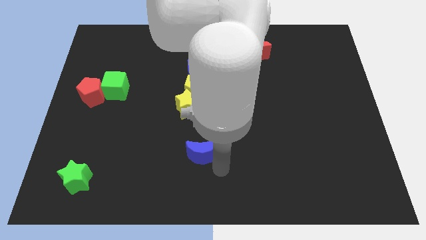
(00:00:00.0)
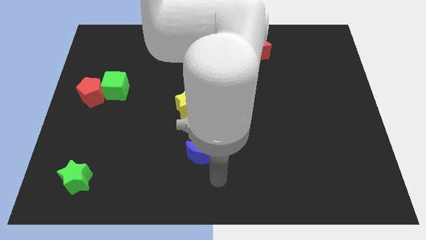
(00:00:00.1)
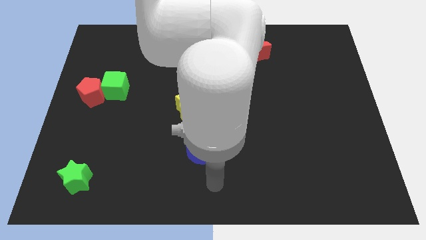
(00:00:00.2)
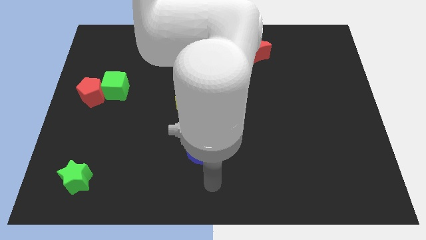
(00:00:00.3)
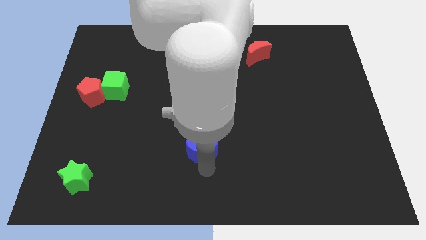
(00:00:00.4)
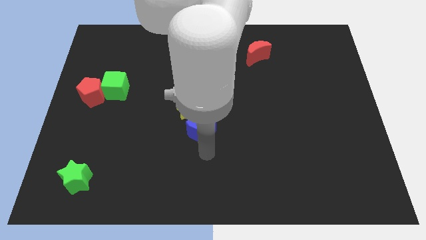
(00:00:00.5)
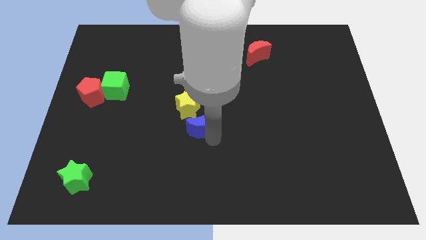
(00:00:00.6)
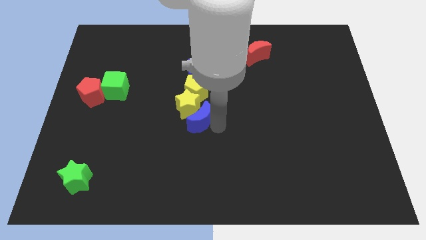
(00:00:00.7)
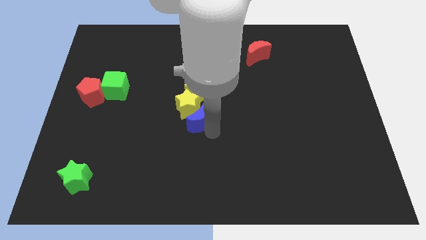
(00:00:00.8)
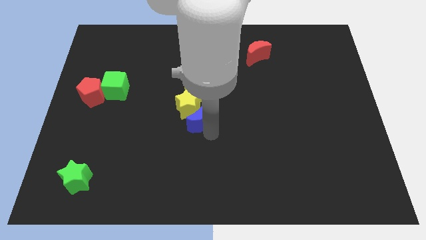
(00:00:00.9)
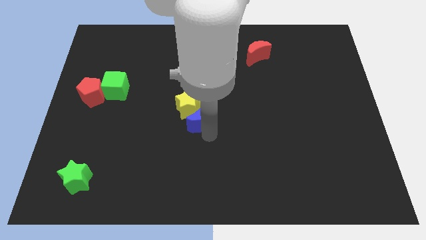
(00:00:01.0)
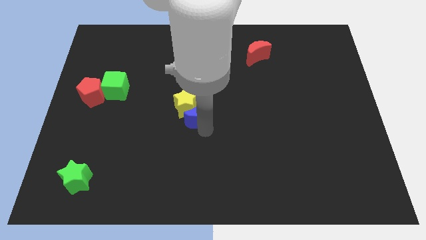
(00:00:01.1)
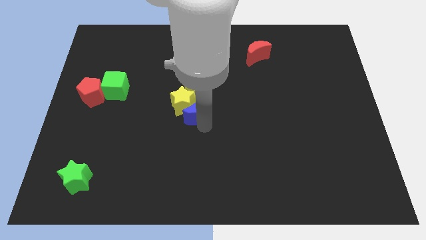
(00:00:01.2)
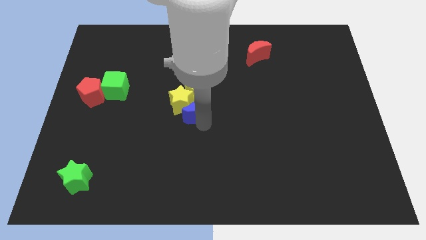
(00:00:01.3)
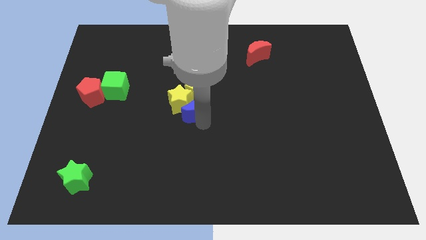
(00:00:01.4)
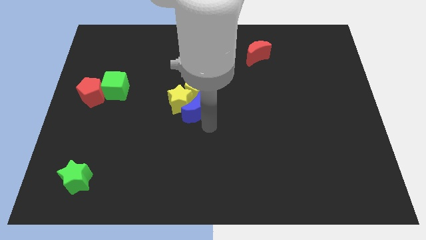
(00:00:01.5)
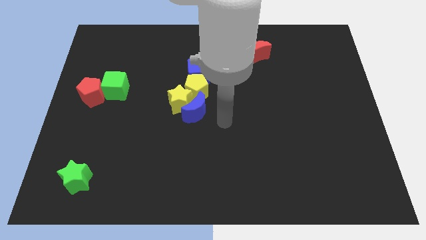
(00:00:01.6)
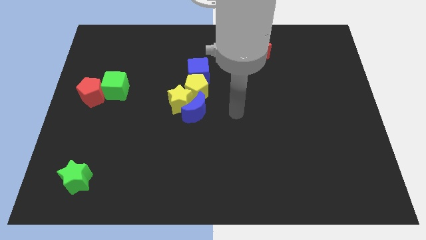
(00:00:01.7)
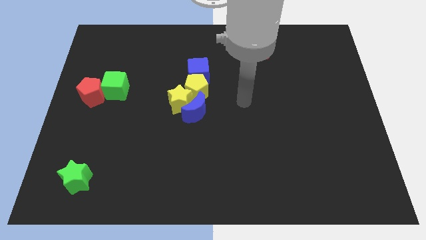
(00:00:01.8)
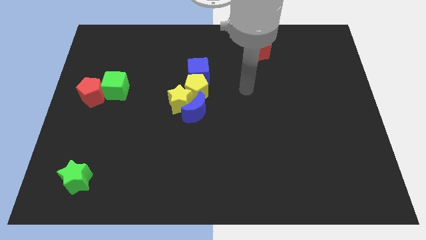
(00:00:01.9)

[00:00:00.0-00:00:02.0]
move the blue moon into the yellow star

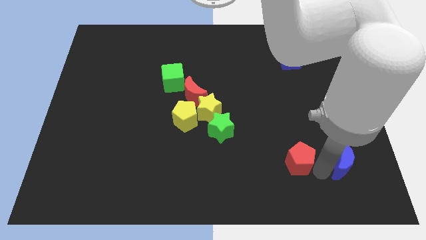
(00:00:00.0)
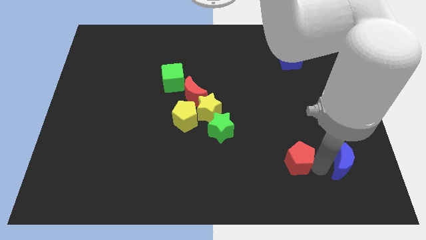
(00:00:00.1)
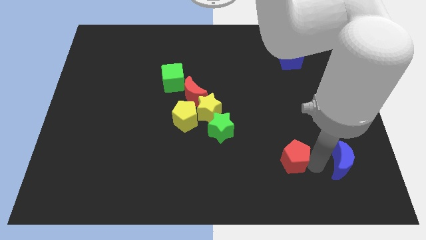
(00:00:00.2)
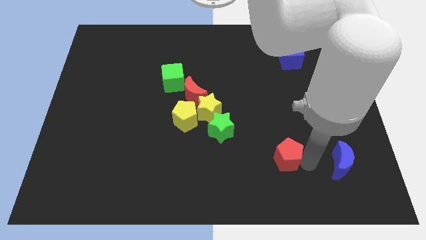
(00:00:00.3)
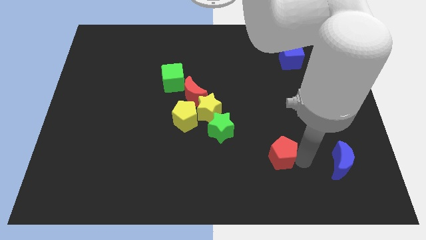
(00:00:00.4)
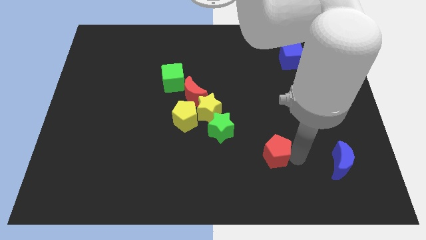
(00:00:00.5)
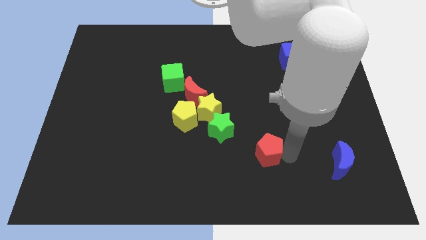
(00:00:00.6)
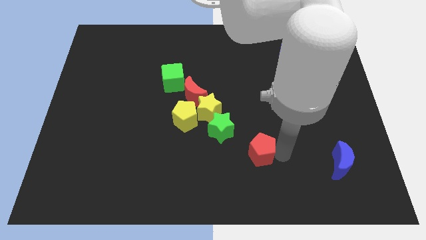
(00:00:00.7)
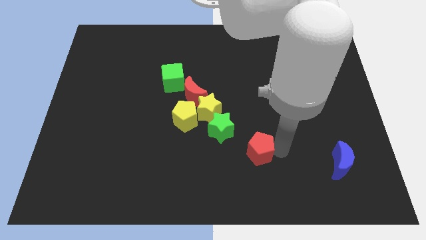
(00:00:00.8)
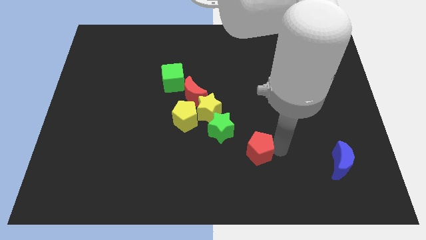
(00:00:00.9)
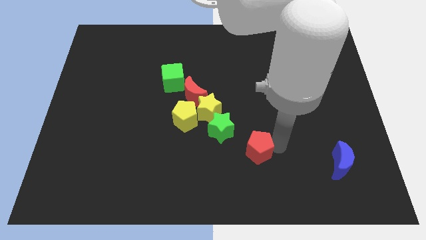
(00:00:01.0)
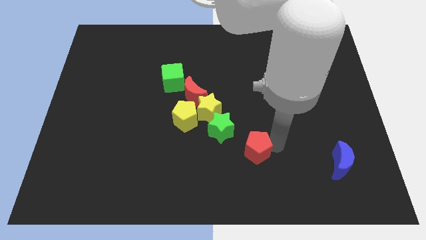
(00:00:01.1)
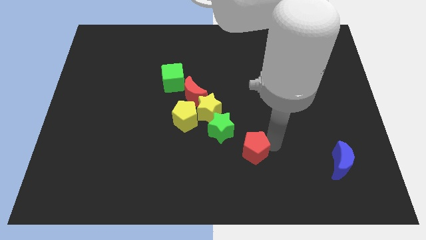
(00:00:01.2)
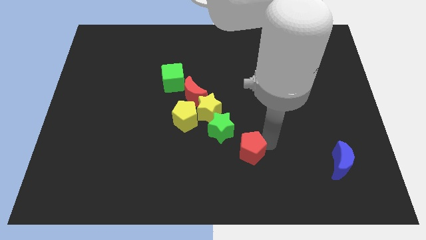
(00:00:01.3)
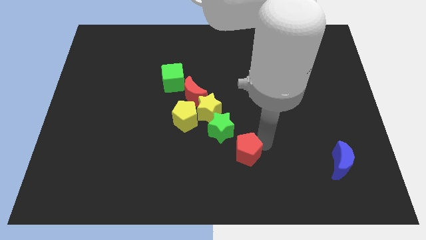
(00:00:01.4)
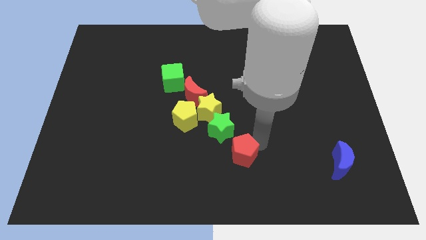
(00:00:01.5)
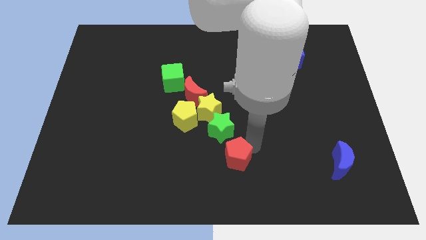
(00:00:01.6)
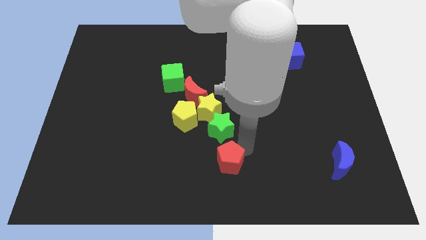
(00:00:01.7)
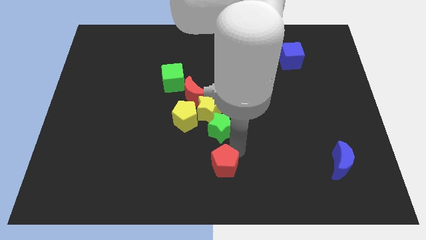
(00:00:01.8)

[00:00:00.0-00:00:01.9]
move the red pentagon to the bottom of the green star

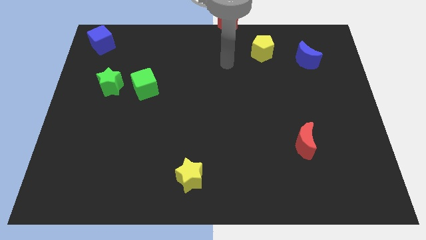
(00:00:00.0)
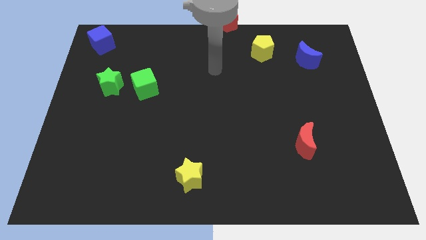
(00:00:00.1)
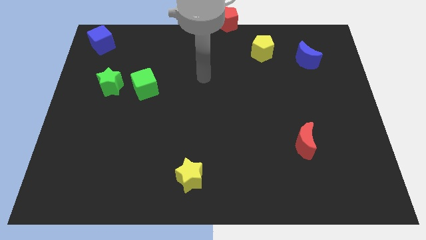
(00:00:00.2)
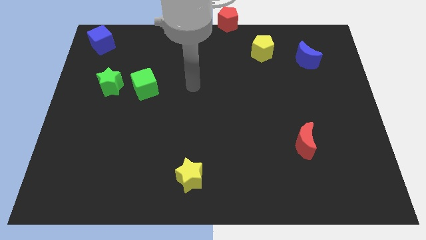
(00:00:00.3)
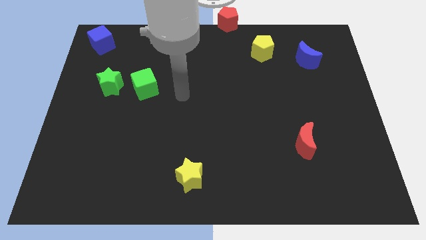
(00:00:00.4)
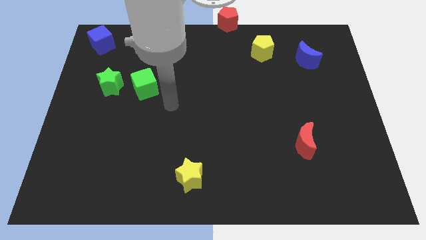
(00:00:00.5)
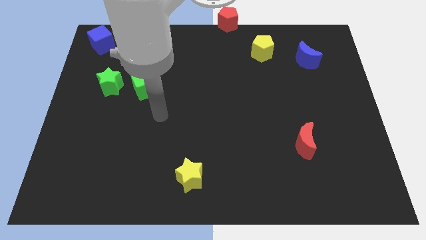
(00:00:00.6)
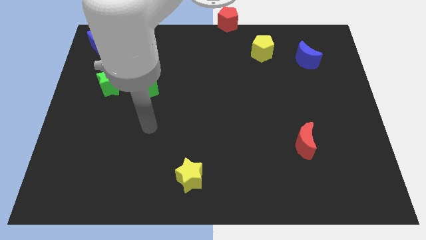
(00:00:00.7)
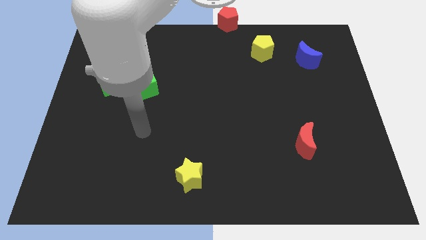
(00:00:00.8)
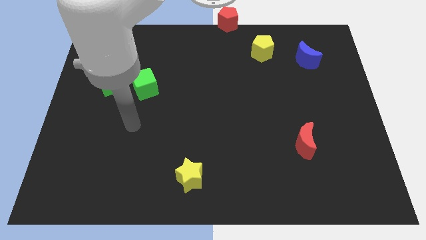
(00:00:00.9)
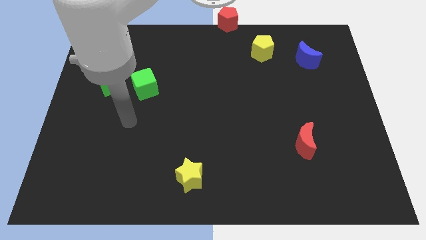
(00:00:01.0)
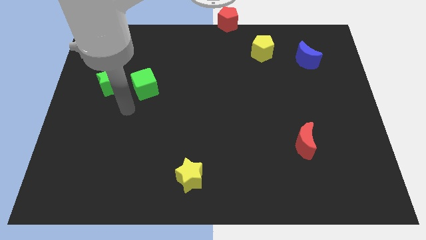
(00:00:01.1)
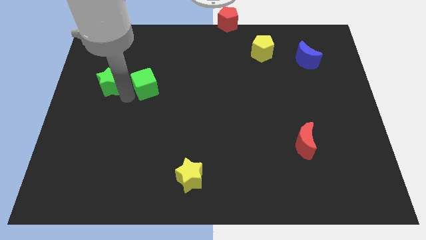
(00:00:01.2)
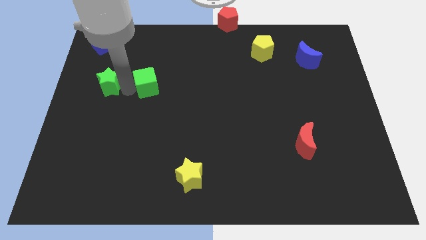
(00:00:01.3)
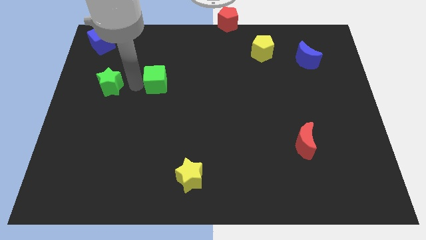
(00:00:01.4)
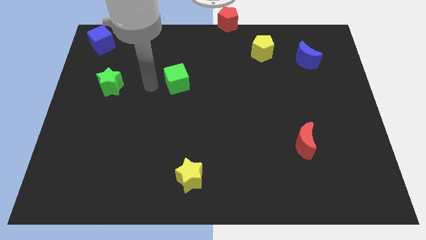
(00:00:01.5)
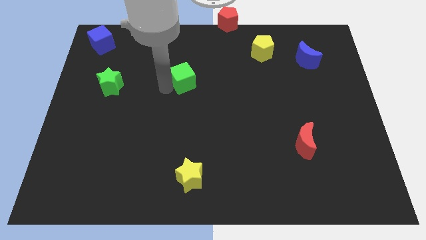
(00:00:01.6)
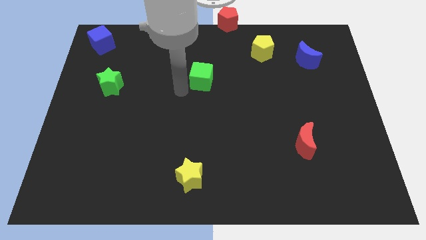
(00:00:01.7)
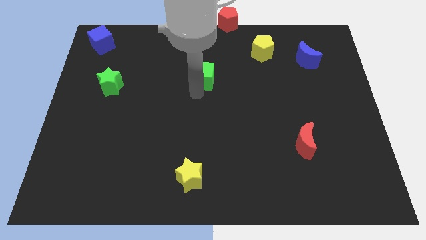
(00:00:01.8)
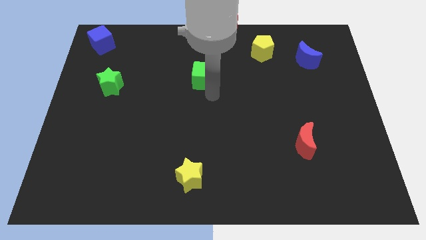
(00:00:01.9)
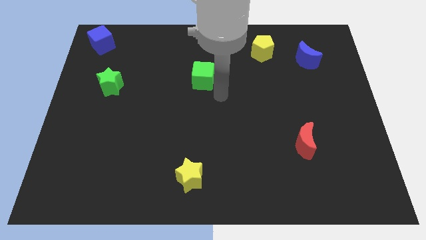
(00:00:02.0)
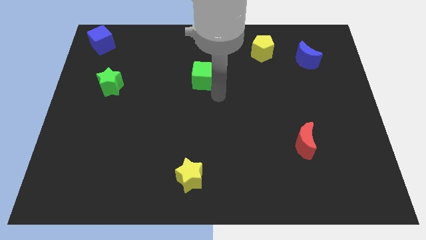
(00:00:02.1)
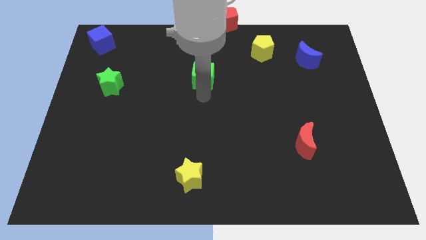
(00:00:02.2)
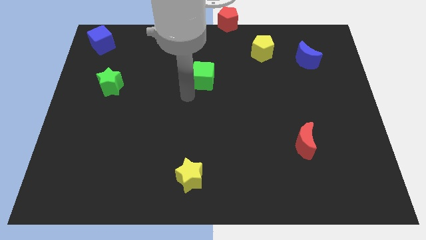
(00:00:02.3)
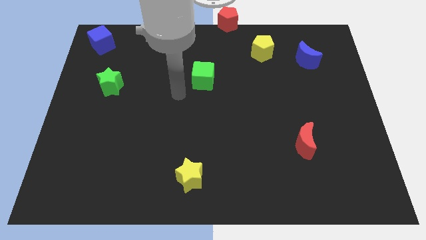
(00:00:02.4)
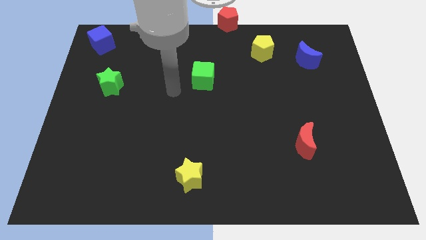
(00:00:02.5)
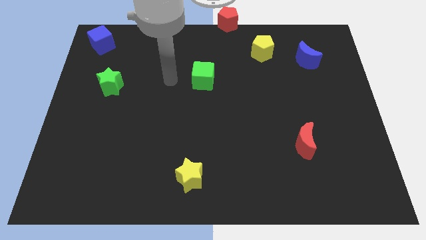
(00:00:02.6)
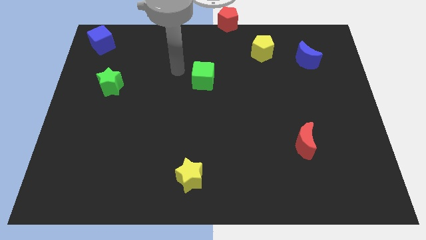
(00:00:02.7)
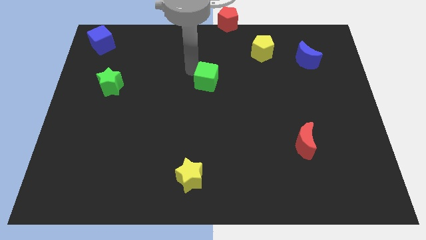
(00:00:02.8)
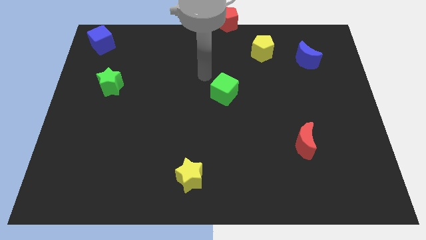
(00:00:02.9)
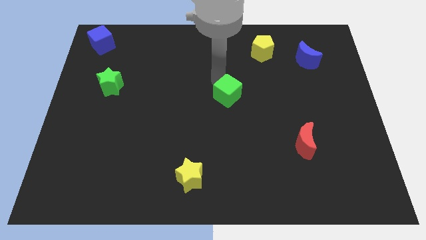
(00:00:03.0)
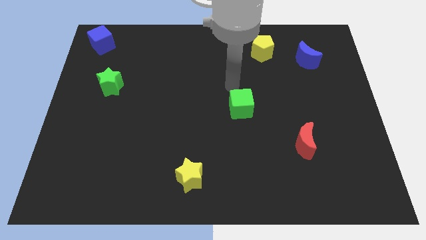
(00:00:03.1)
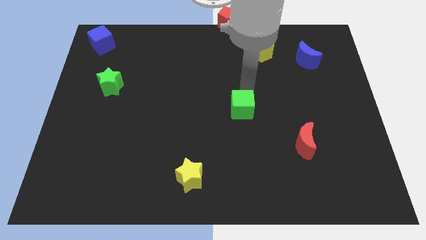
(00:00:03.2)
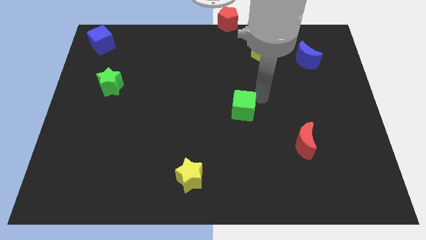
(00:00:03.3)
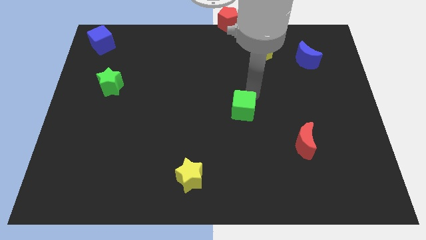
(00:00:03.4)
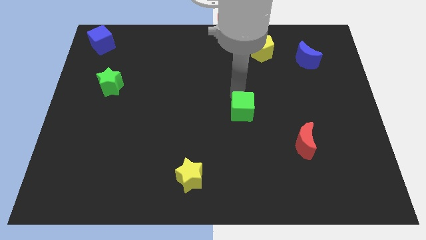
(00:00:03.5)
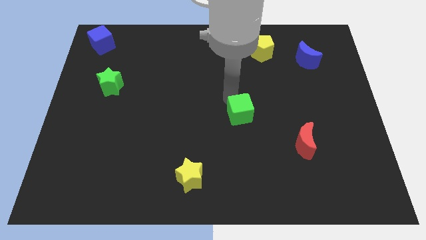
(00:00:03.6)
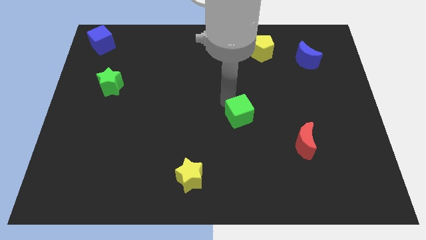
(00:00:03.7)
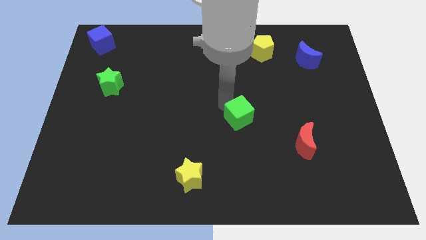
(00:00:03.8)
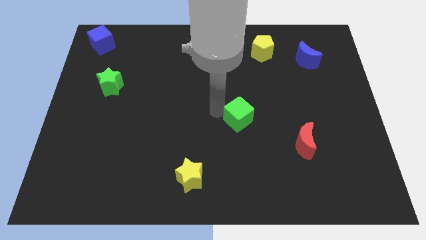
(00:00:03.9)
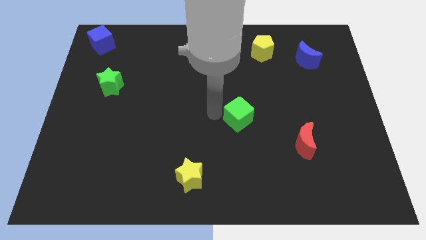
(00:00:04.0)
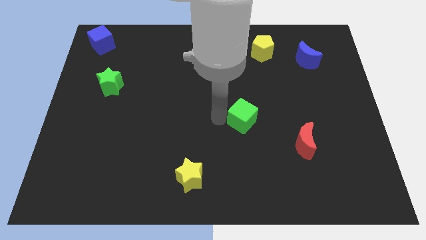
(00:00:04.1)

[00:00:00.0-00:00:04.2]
move the green cube to the top left of the red crescent

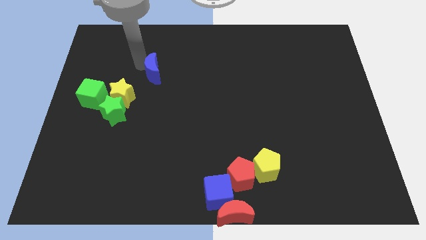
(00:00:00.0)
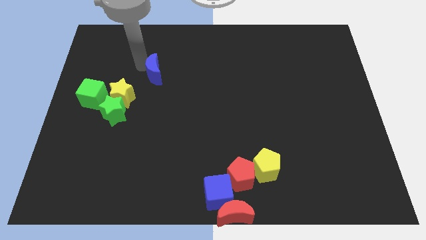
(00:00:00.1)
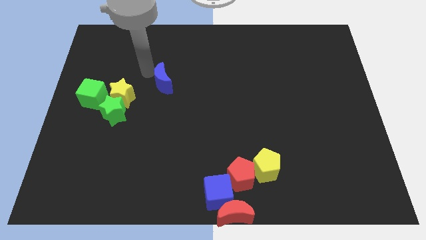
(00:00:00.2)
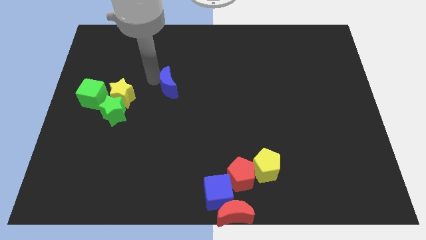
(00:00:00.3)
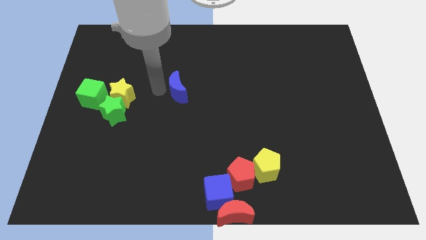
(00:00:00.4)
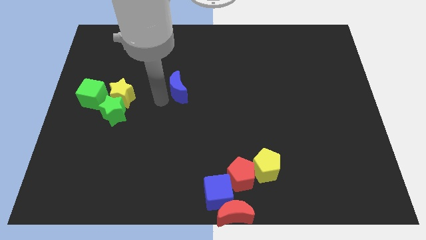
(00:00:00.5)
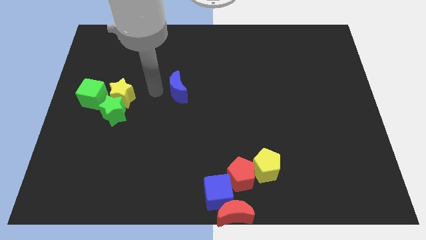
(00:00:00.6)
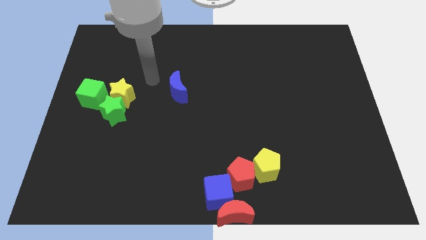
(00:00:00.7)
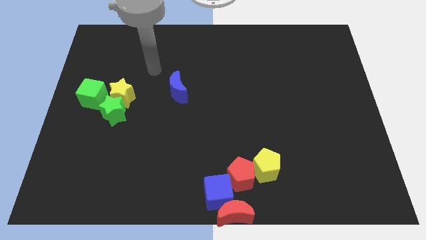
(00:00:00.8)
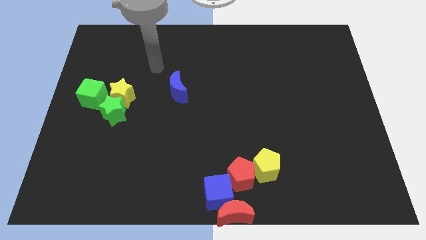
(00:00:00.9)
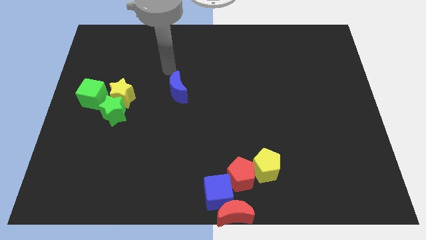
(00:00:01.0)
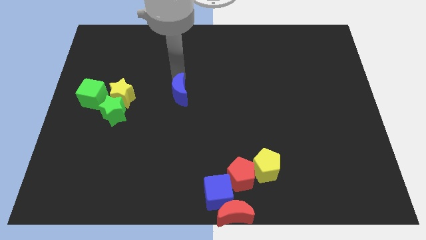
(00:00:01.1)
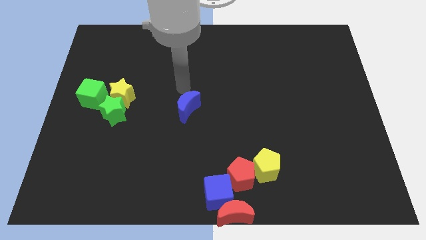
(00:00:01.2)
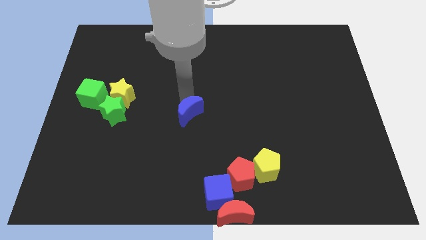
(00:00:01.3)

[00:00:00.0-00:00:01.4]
push the blue cube to the center of the board
